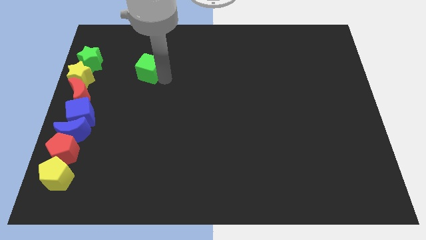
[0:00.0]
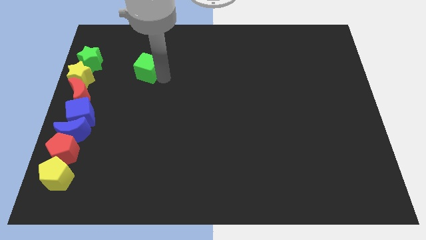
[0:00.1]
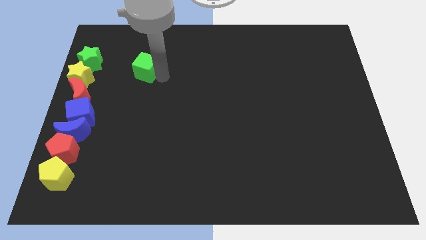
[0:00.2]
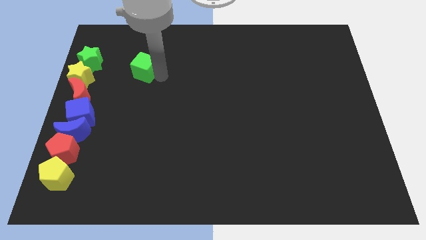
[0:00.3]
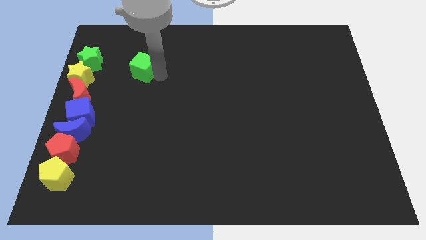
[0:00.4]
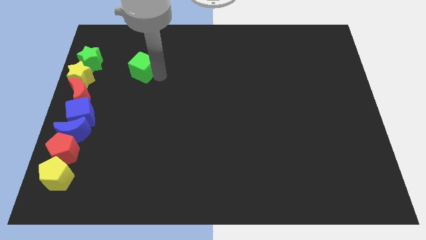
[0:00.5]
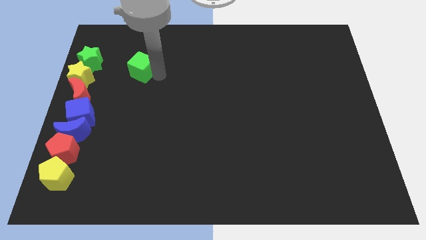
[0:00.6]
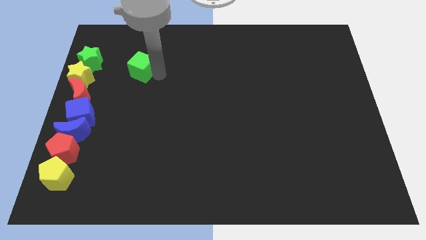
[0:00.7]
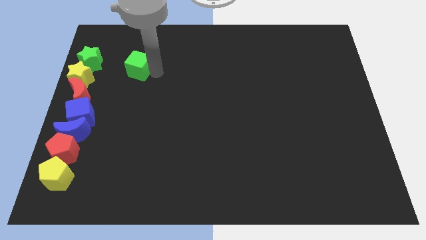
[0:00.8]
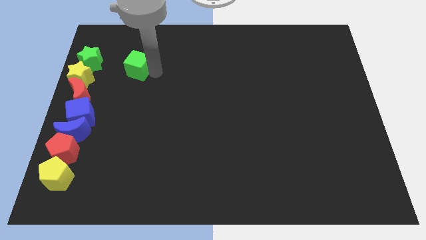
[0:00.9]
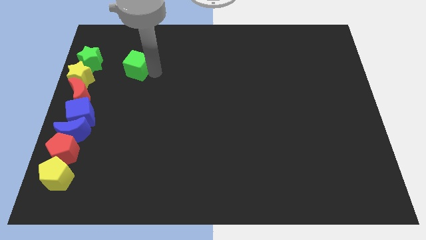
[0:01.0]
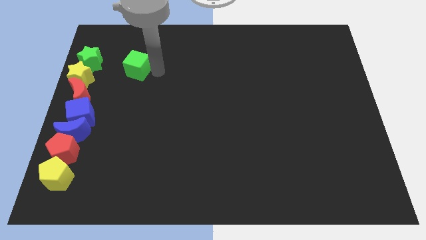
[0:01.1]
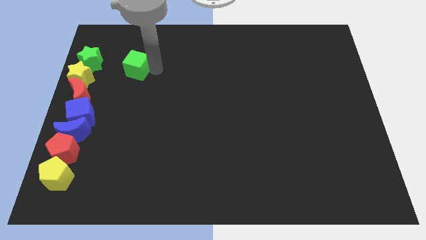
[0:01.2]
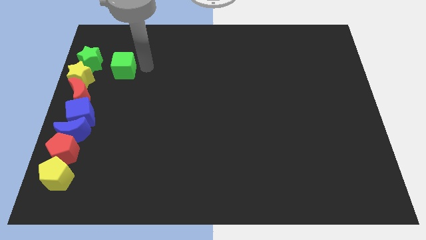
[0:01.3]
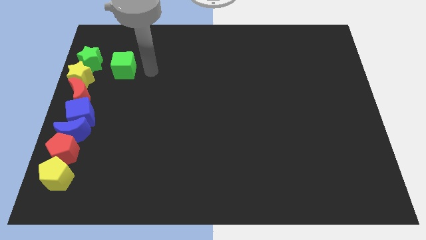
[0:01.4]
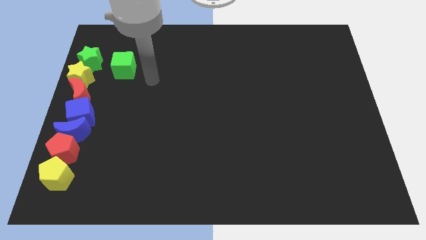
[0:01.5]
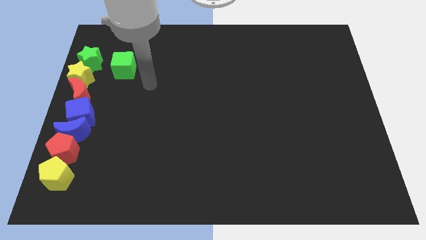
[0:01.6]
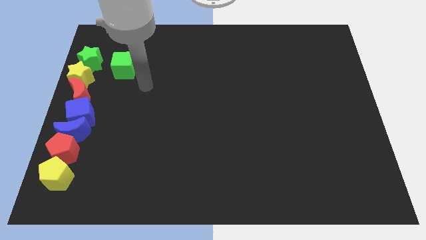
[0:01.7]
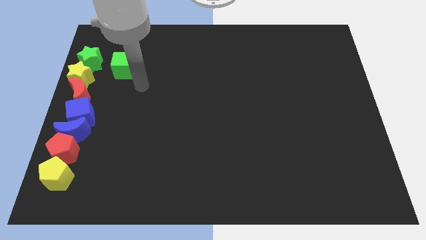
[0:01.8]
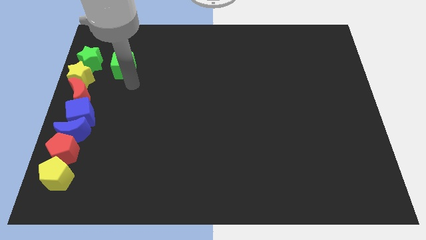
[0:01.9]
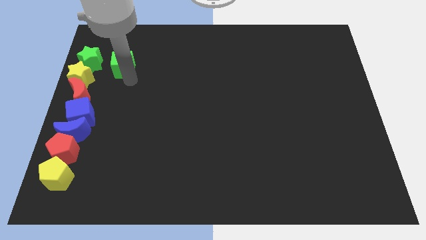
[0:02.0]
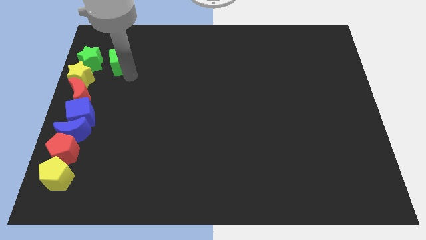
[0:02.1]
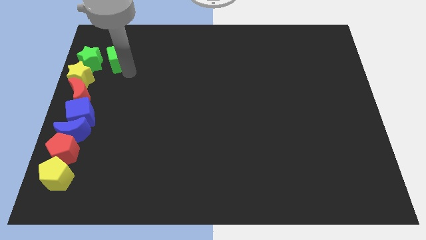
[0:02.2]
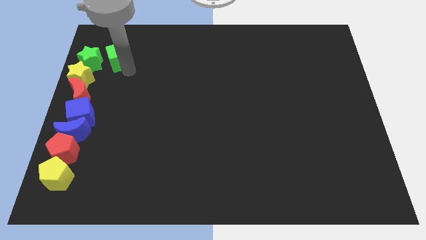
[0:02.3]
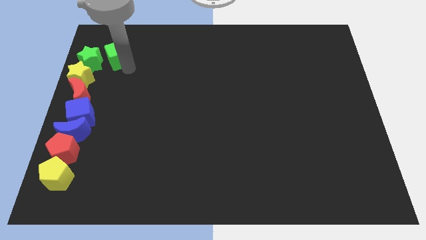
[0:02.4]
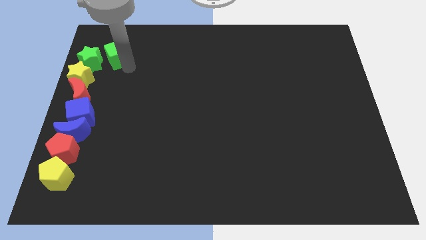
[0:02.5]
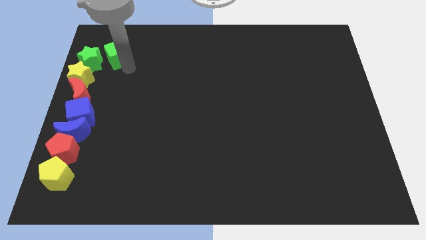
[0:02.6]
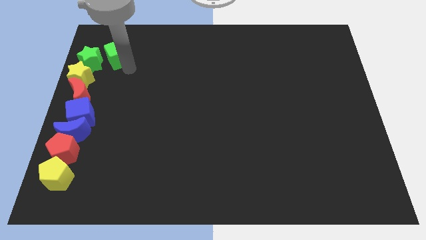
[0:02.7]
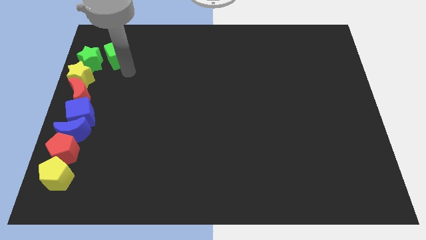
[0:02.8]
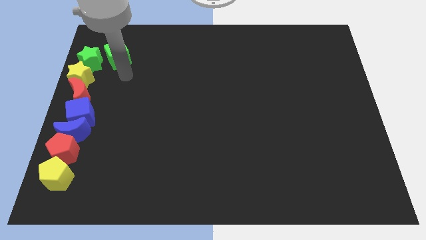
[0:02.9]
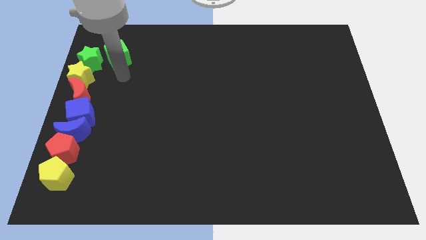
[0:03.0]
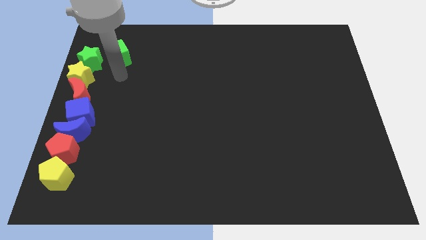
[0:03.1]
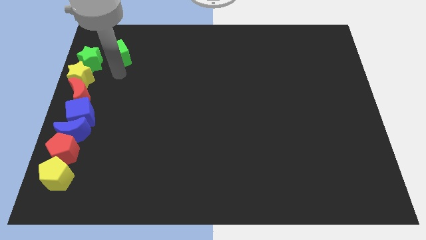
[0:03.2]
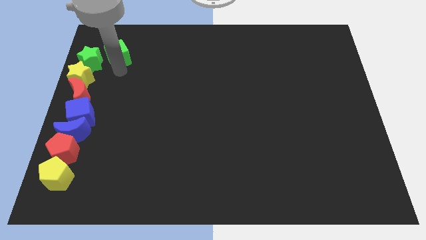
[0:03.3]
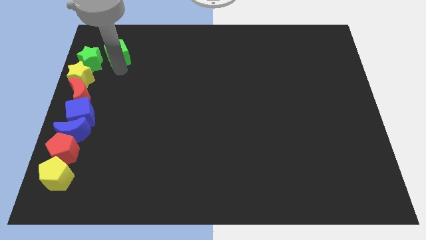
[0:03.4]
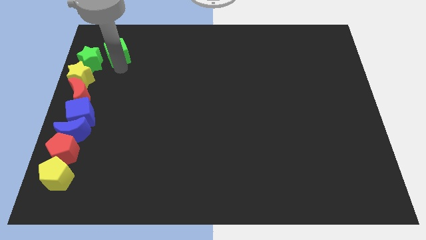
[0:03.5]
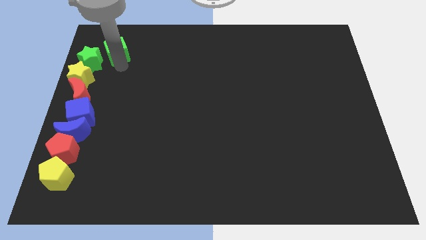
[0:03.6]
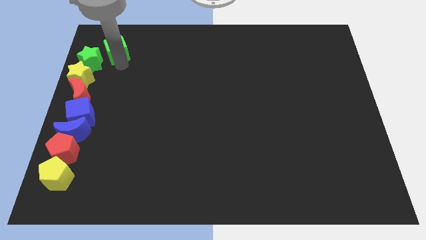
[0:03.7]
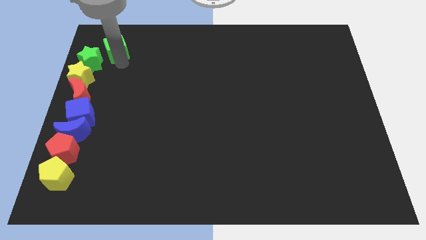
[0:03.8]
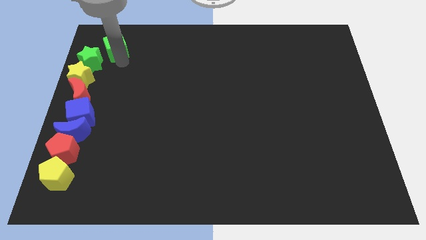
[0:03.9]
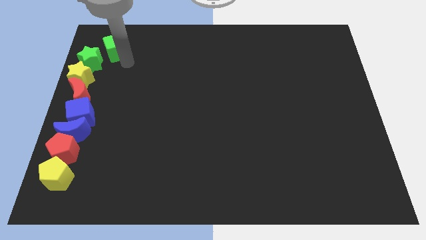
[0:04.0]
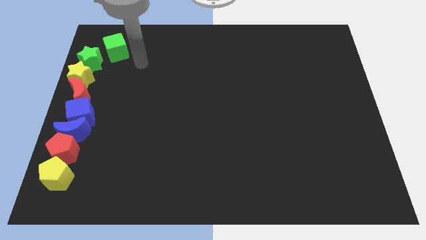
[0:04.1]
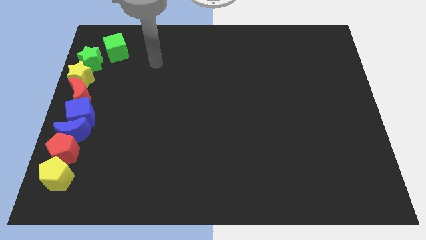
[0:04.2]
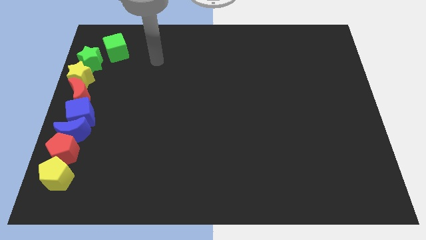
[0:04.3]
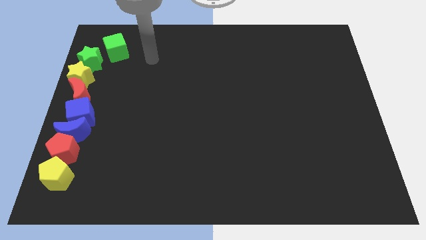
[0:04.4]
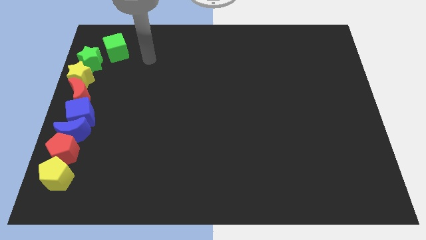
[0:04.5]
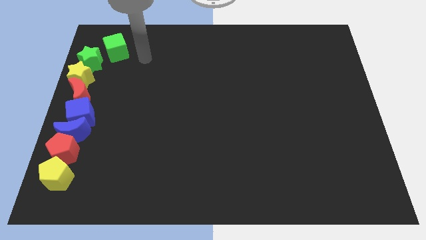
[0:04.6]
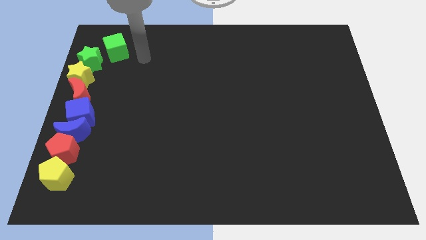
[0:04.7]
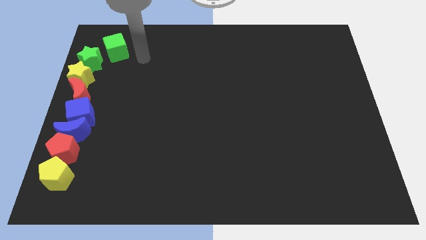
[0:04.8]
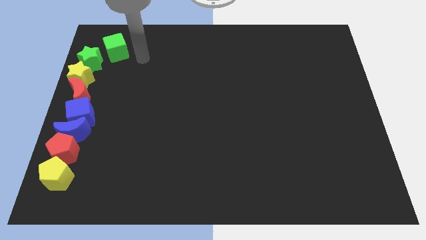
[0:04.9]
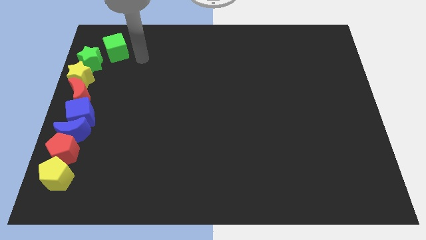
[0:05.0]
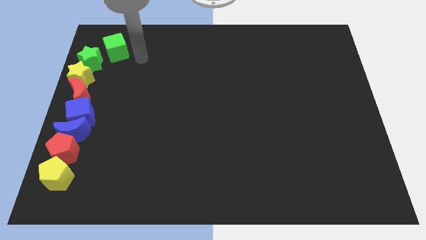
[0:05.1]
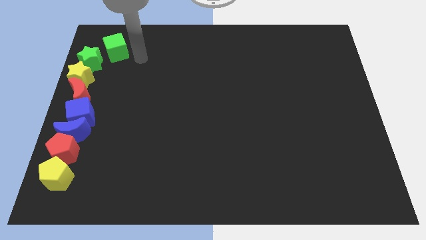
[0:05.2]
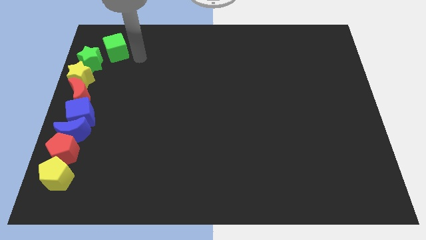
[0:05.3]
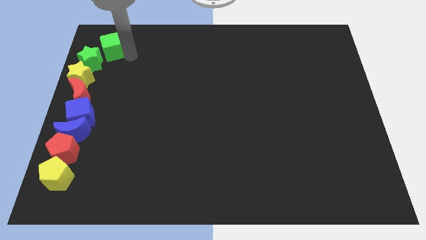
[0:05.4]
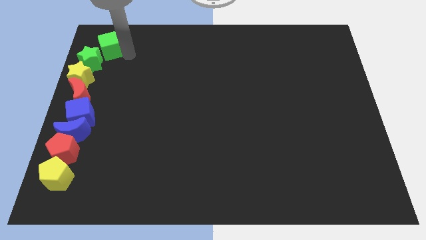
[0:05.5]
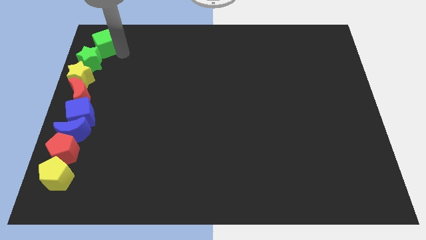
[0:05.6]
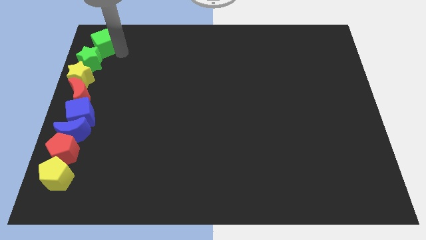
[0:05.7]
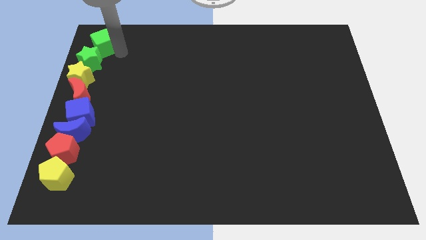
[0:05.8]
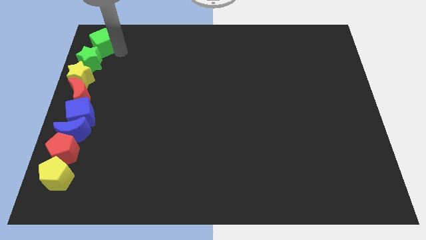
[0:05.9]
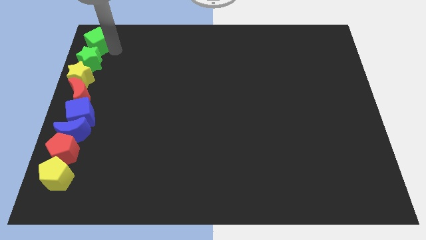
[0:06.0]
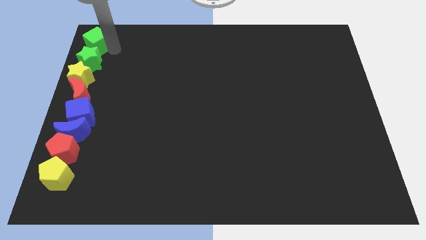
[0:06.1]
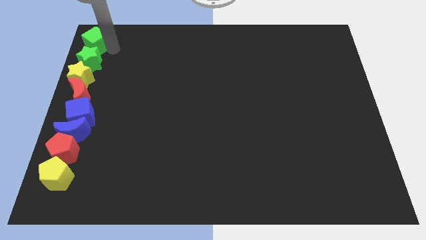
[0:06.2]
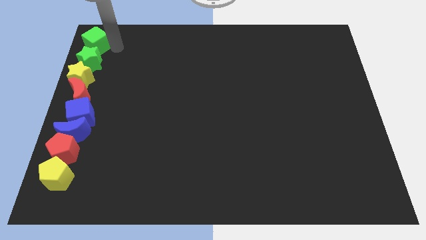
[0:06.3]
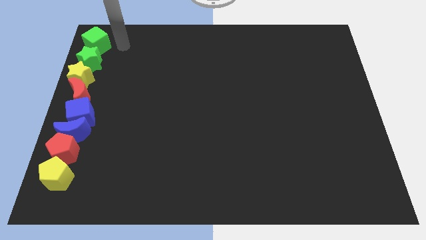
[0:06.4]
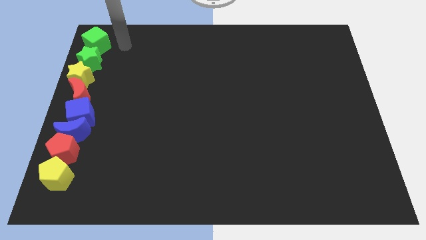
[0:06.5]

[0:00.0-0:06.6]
move the green cube to the top of blocks to form vertical line

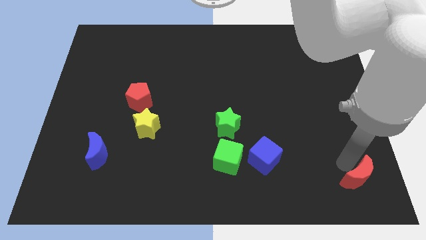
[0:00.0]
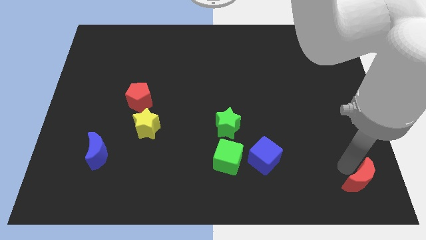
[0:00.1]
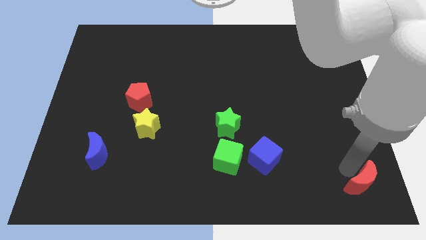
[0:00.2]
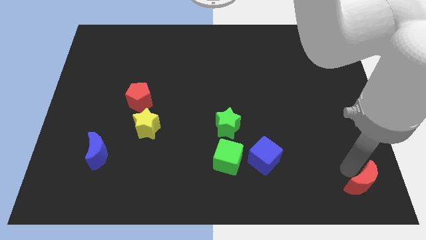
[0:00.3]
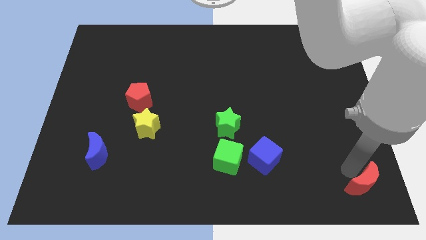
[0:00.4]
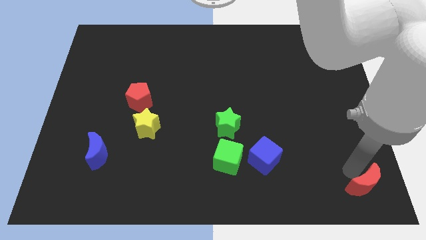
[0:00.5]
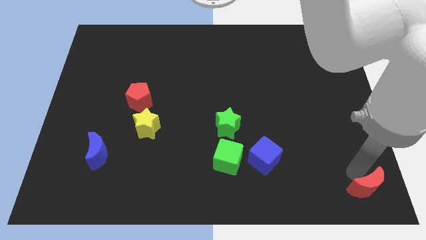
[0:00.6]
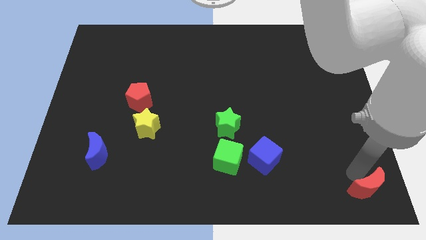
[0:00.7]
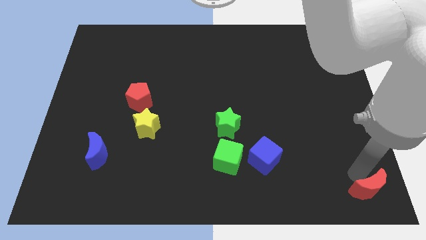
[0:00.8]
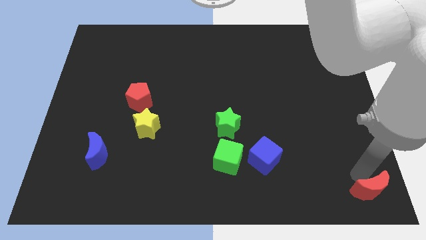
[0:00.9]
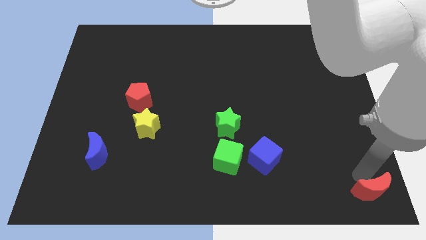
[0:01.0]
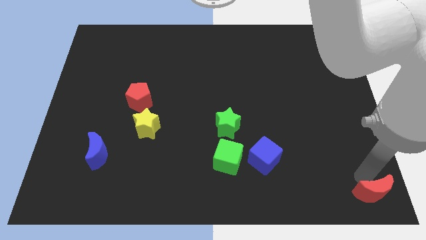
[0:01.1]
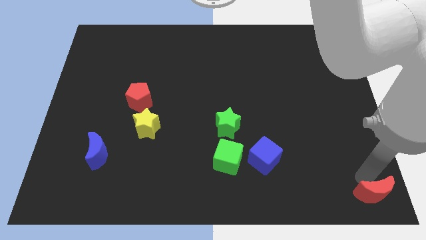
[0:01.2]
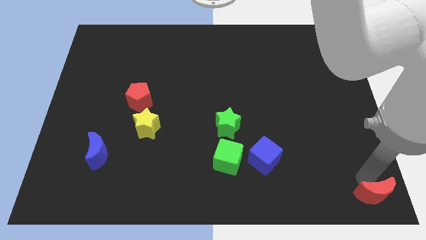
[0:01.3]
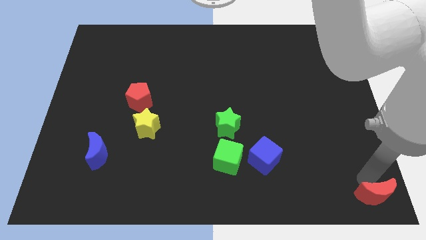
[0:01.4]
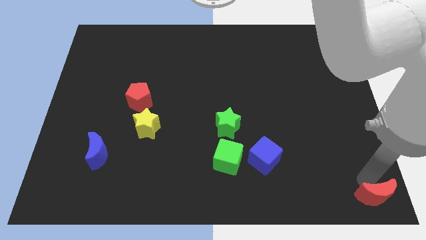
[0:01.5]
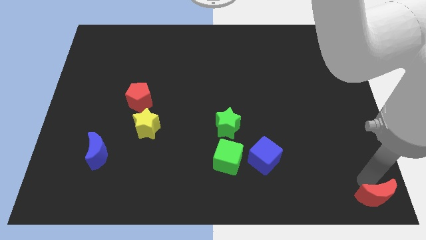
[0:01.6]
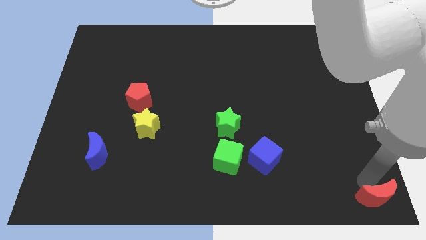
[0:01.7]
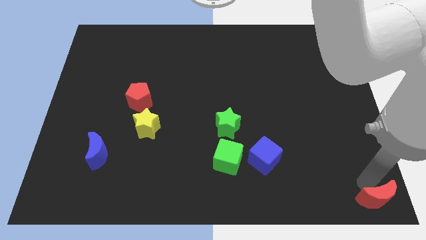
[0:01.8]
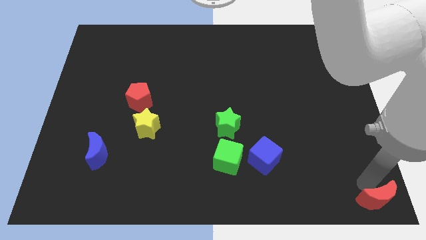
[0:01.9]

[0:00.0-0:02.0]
slide the red moon to the bottom right corner

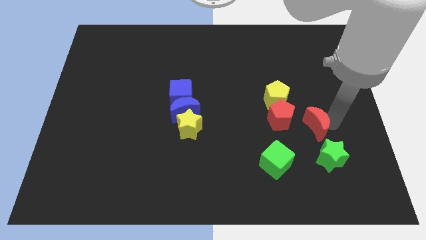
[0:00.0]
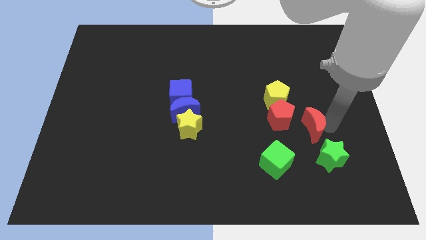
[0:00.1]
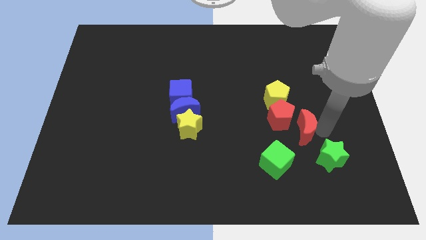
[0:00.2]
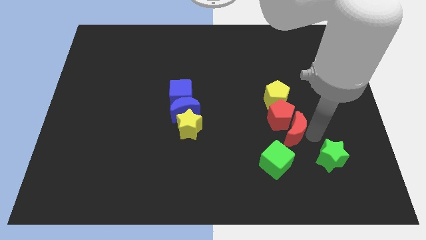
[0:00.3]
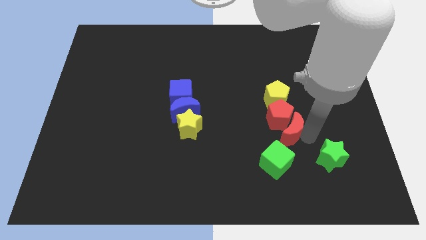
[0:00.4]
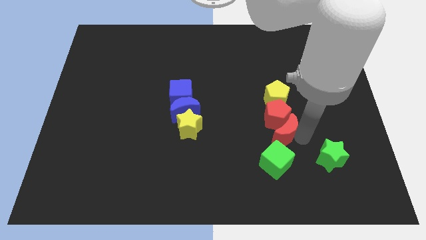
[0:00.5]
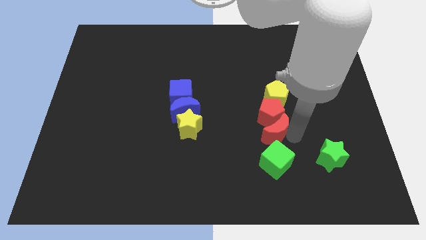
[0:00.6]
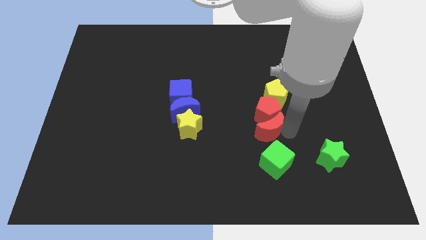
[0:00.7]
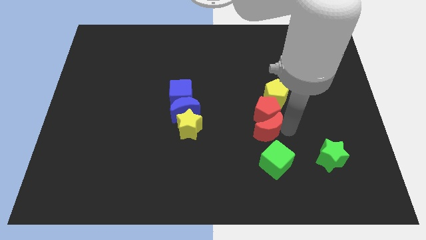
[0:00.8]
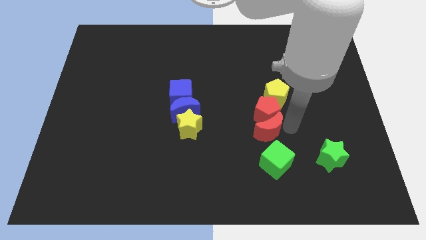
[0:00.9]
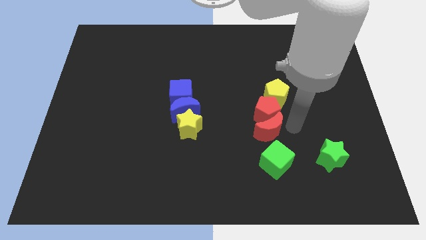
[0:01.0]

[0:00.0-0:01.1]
push red moon into red pentagon
